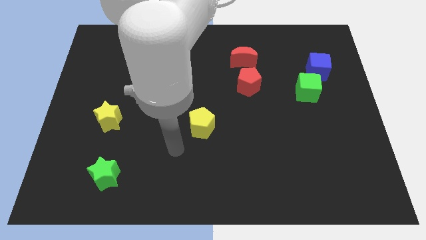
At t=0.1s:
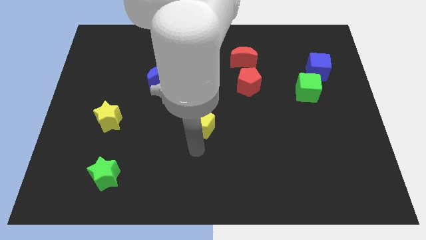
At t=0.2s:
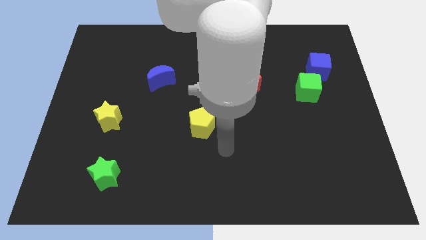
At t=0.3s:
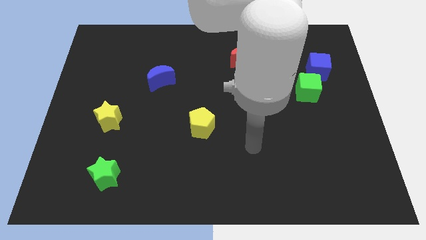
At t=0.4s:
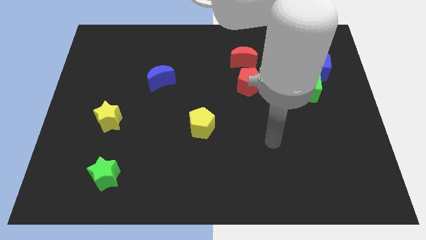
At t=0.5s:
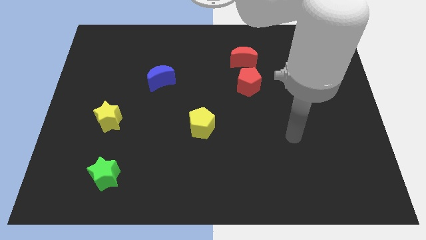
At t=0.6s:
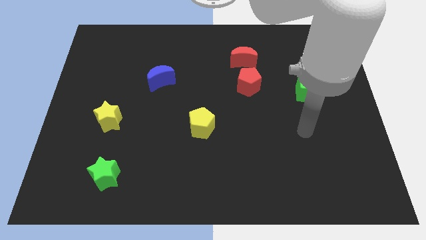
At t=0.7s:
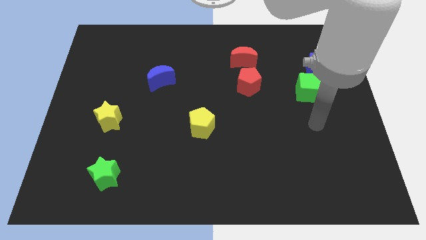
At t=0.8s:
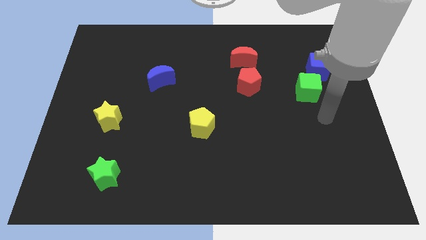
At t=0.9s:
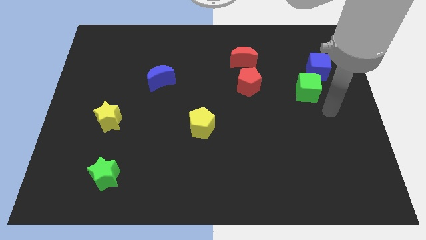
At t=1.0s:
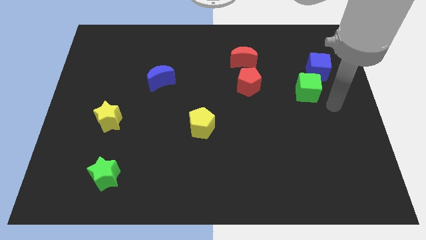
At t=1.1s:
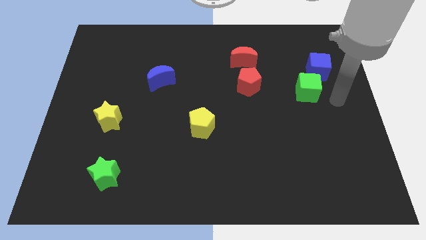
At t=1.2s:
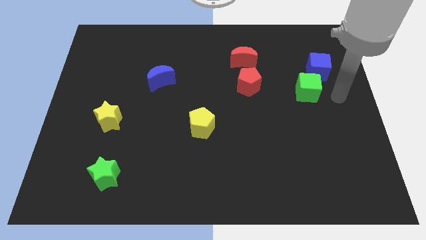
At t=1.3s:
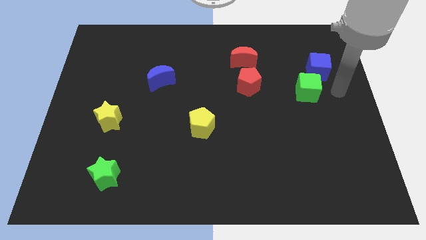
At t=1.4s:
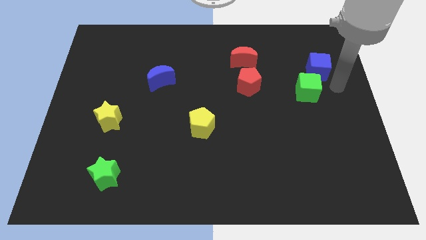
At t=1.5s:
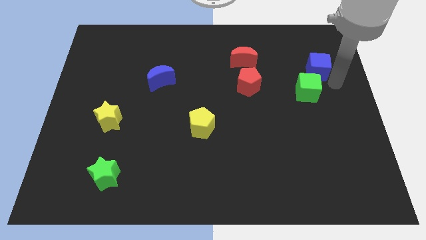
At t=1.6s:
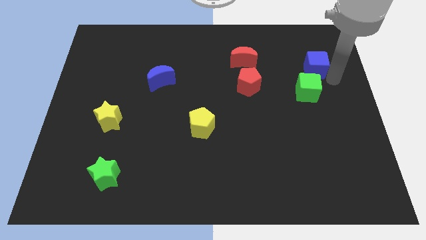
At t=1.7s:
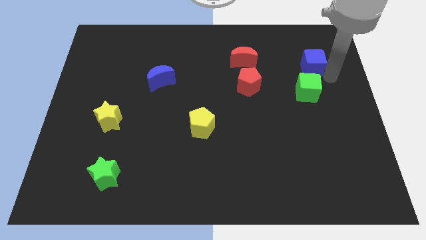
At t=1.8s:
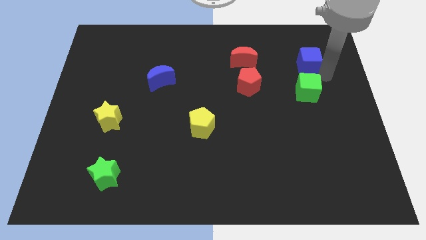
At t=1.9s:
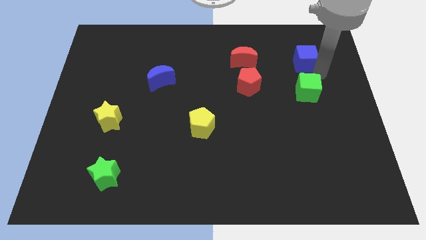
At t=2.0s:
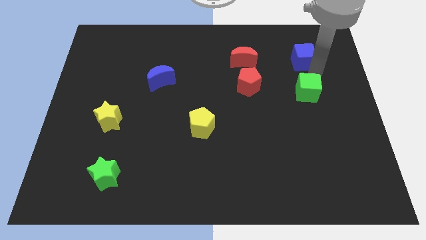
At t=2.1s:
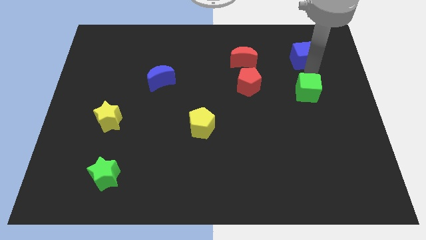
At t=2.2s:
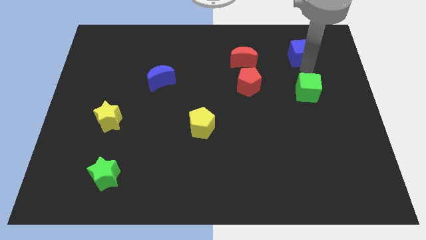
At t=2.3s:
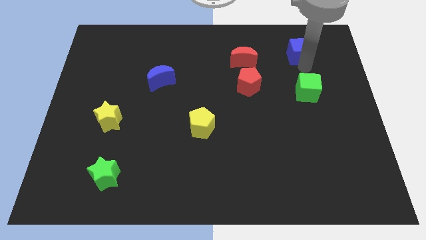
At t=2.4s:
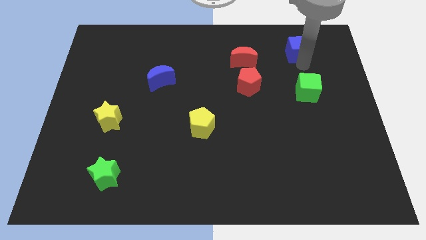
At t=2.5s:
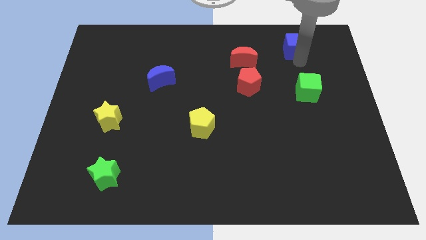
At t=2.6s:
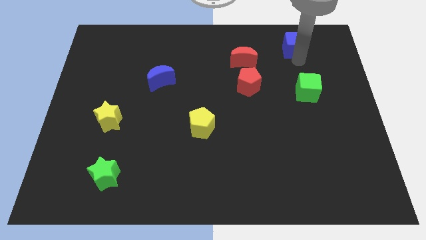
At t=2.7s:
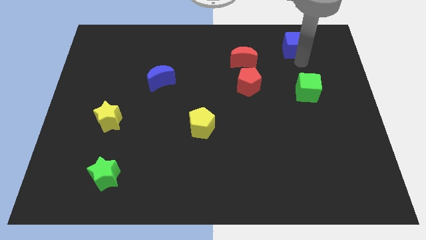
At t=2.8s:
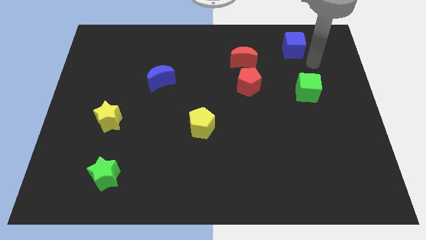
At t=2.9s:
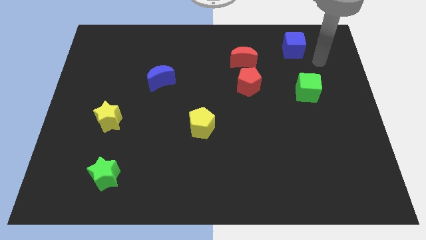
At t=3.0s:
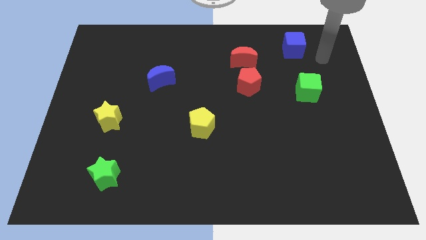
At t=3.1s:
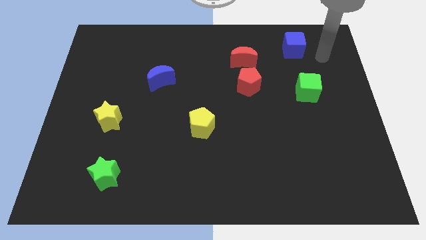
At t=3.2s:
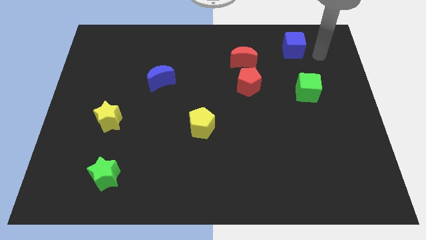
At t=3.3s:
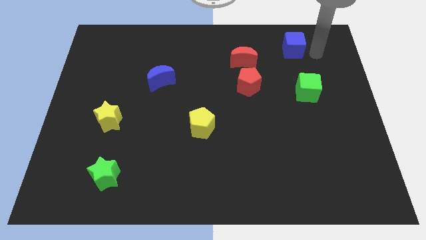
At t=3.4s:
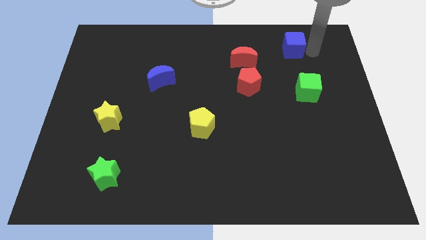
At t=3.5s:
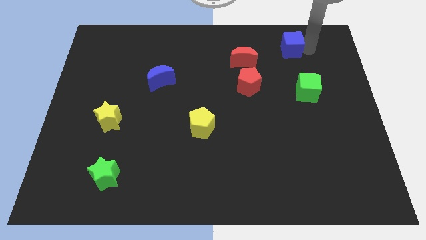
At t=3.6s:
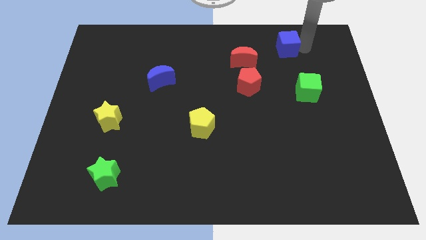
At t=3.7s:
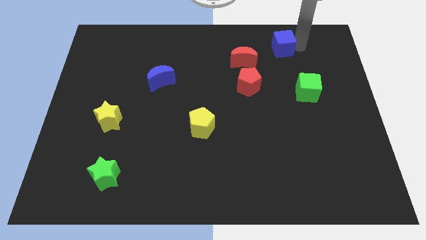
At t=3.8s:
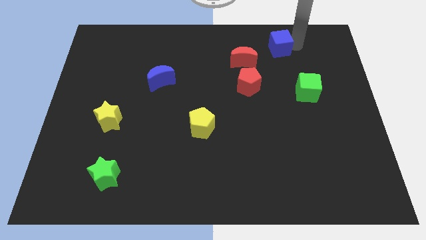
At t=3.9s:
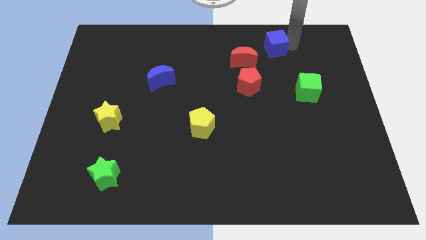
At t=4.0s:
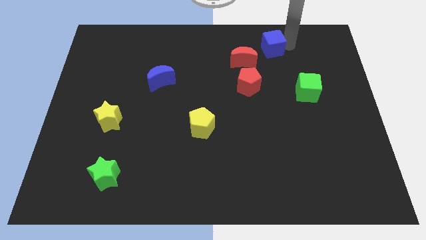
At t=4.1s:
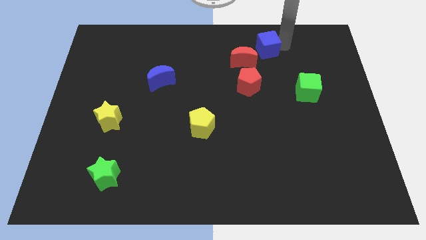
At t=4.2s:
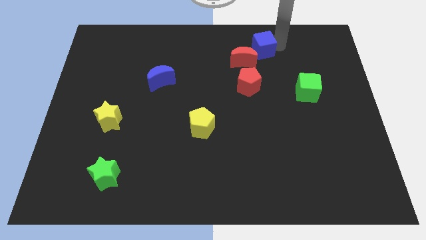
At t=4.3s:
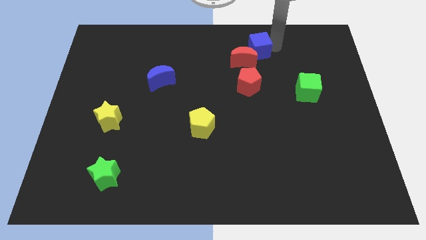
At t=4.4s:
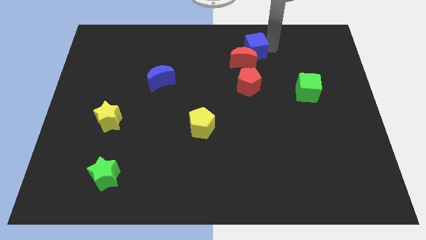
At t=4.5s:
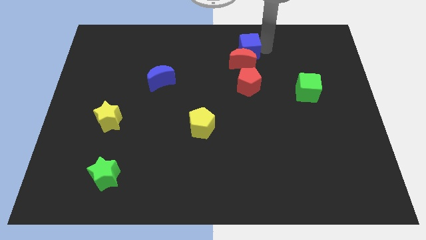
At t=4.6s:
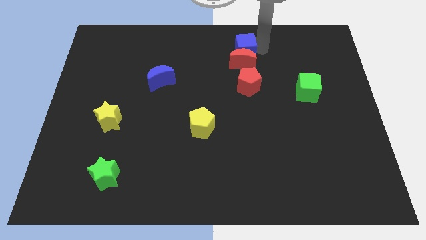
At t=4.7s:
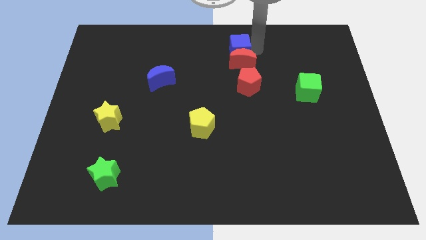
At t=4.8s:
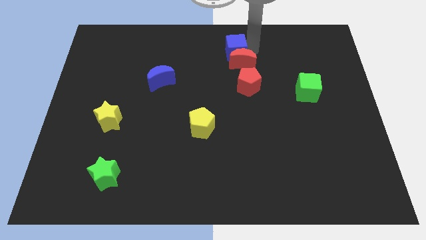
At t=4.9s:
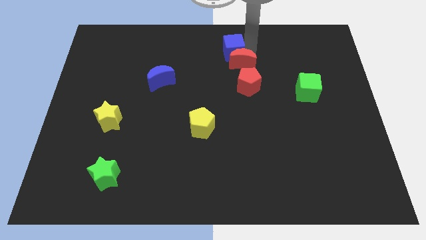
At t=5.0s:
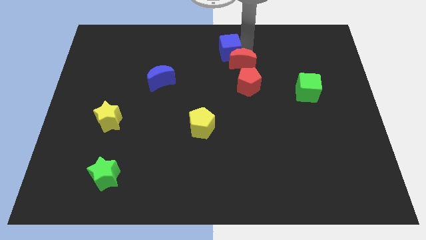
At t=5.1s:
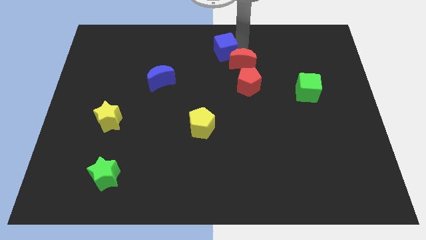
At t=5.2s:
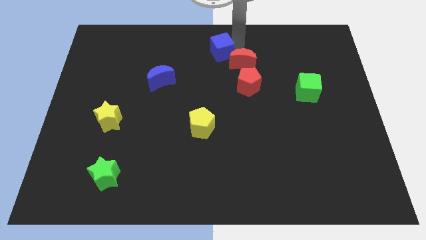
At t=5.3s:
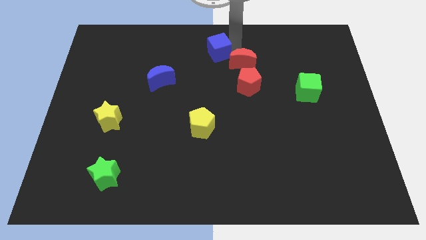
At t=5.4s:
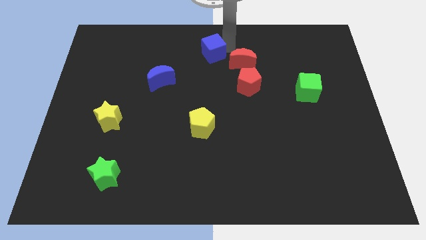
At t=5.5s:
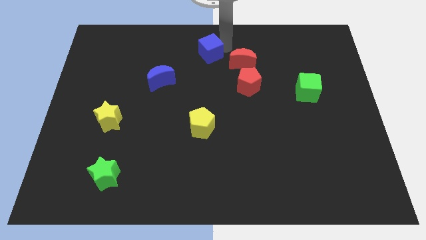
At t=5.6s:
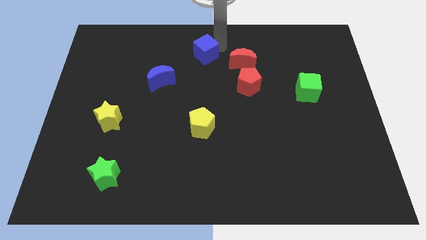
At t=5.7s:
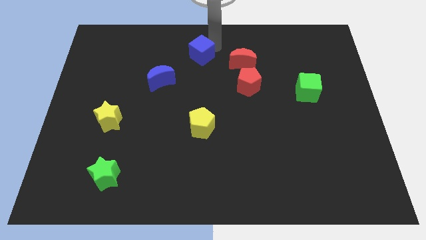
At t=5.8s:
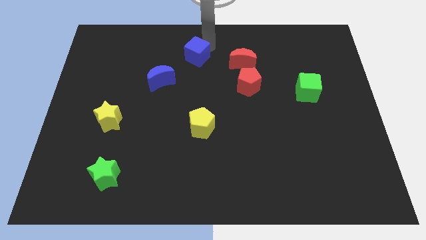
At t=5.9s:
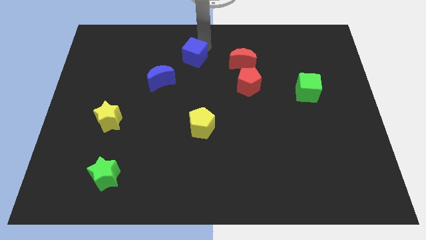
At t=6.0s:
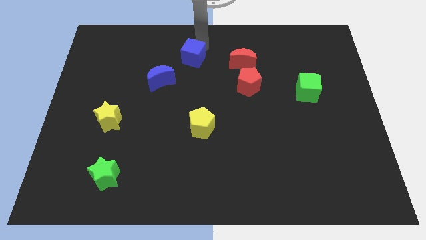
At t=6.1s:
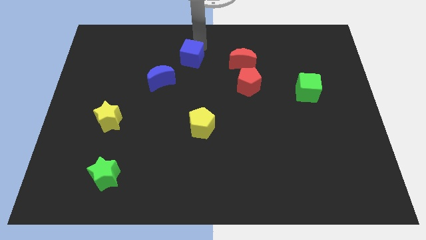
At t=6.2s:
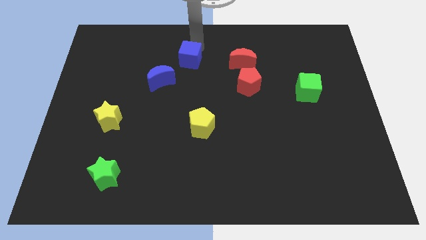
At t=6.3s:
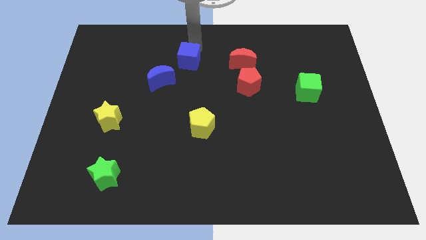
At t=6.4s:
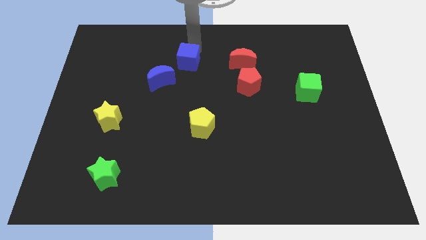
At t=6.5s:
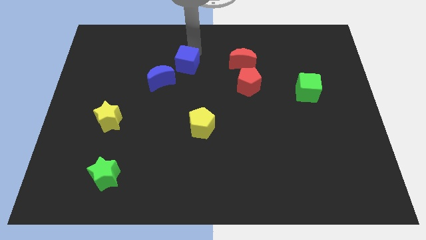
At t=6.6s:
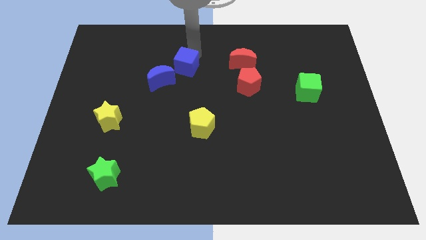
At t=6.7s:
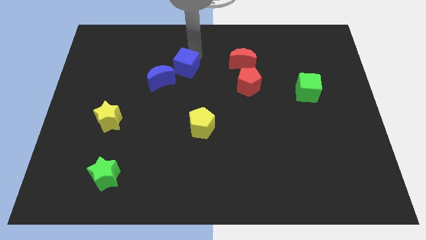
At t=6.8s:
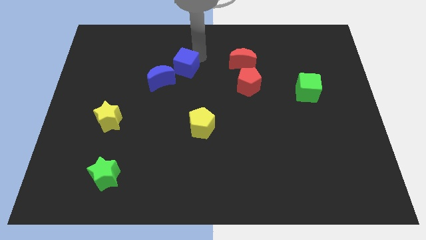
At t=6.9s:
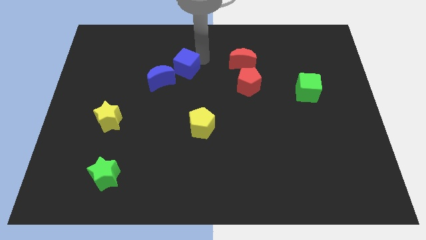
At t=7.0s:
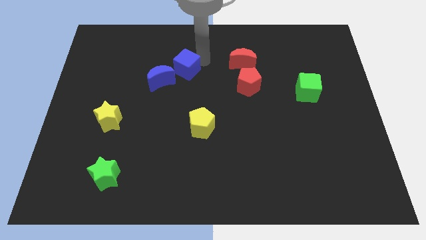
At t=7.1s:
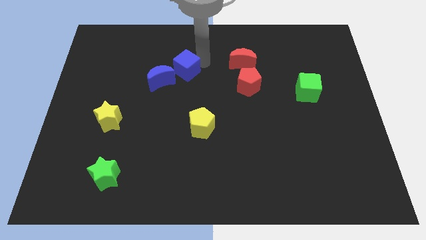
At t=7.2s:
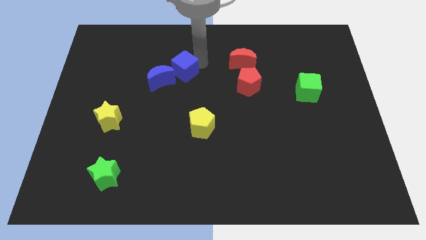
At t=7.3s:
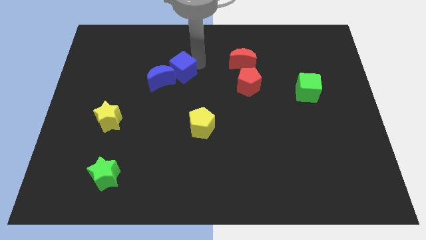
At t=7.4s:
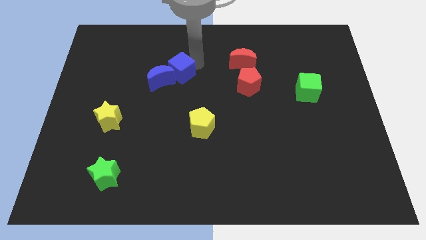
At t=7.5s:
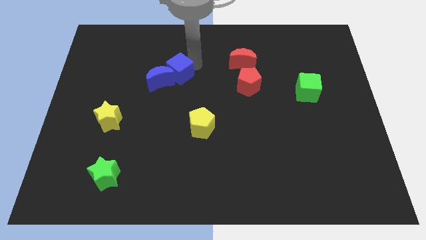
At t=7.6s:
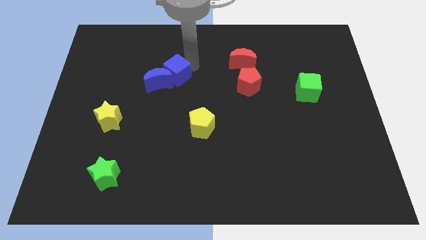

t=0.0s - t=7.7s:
slide the blue cube to the blue moon

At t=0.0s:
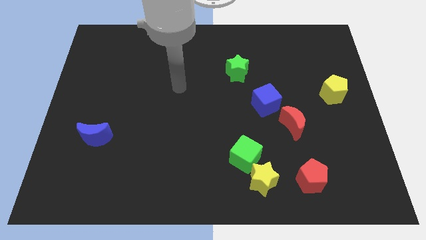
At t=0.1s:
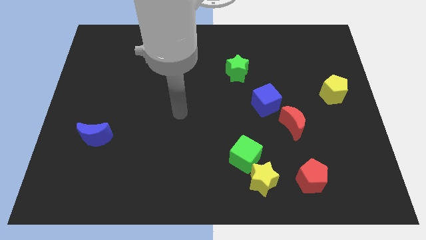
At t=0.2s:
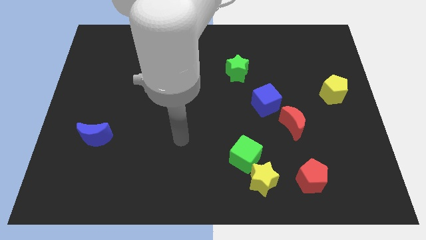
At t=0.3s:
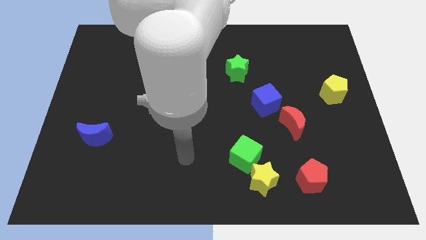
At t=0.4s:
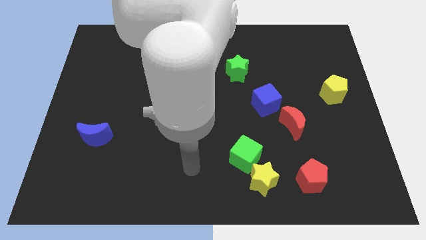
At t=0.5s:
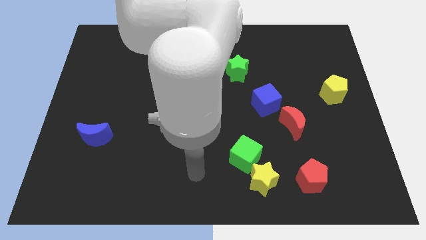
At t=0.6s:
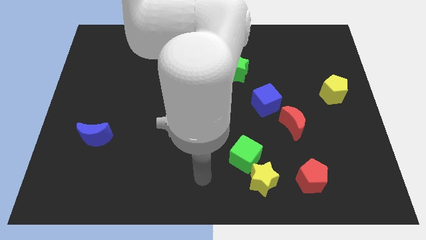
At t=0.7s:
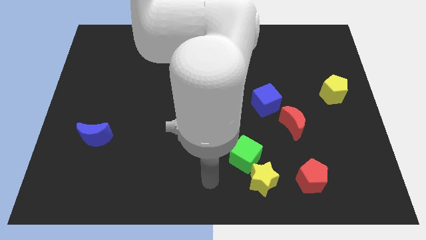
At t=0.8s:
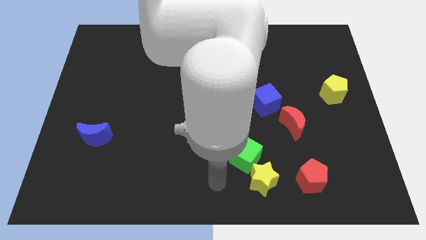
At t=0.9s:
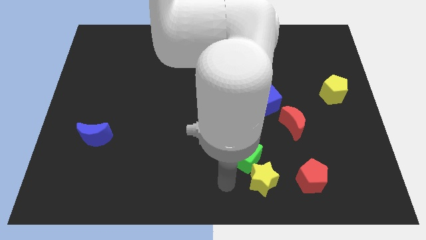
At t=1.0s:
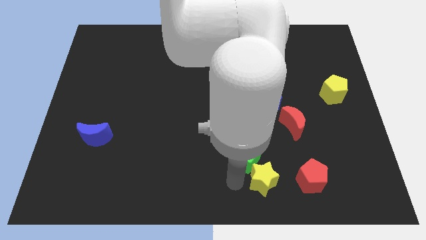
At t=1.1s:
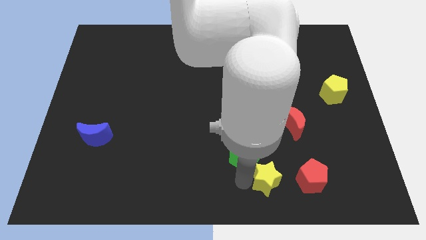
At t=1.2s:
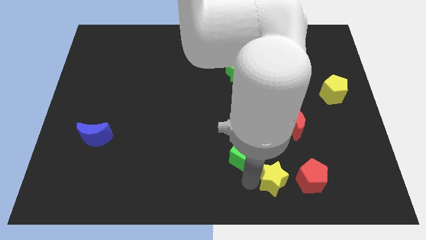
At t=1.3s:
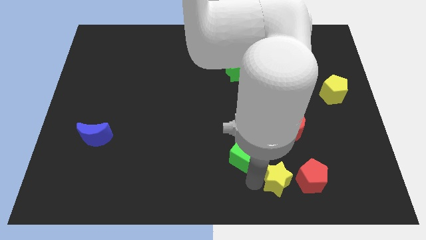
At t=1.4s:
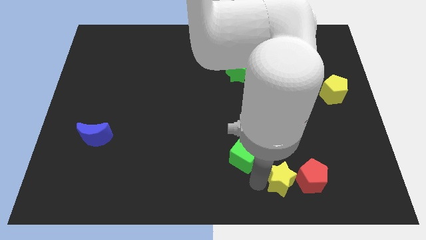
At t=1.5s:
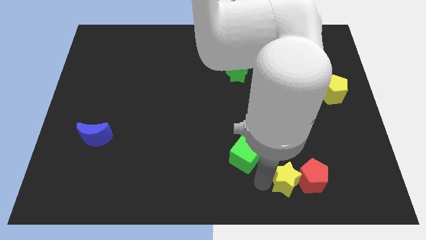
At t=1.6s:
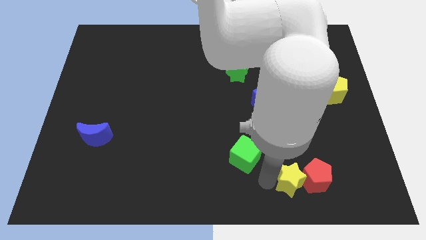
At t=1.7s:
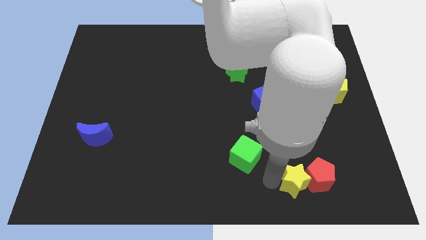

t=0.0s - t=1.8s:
slide the yellow star towards the red pentagon
